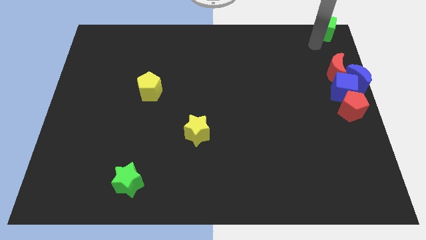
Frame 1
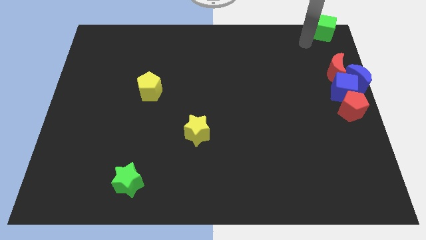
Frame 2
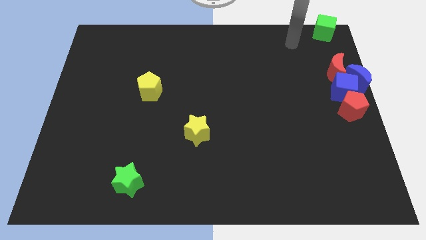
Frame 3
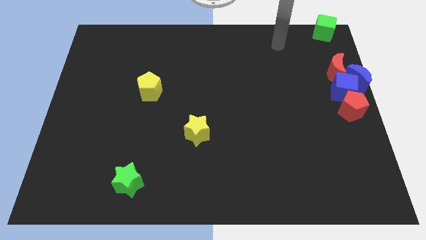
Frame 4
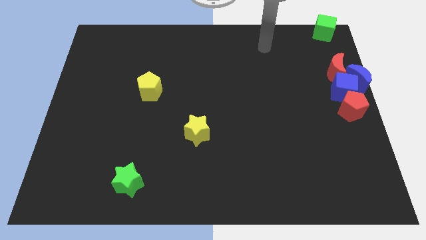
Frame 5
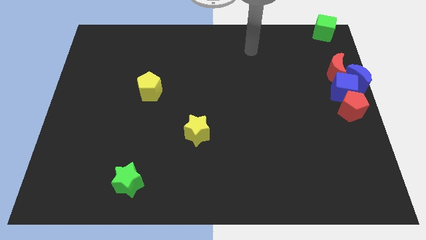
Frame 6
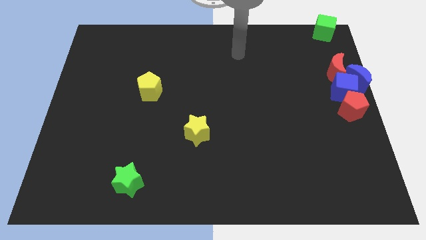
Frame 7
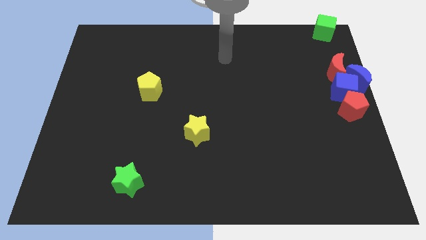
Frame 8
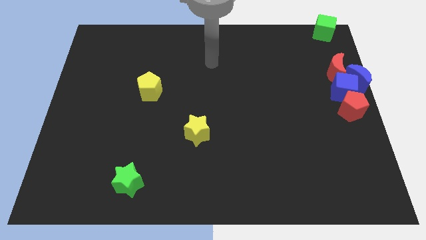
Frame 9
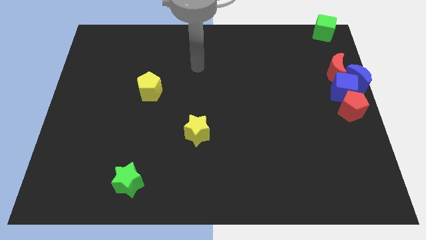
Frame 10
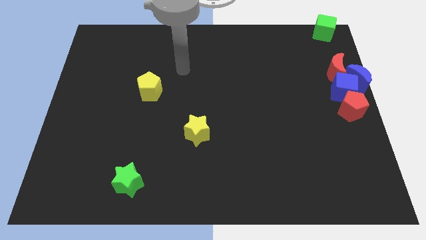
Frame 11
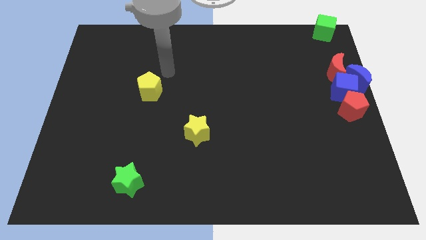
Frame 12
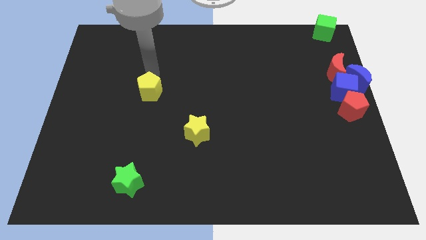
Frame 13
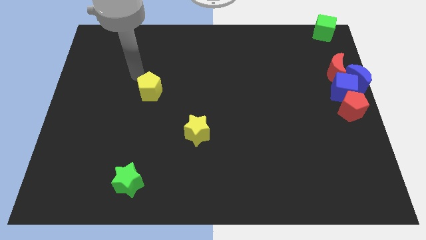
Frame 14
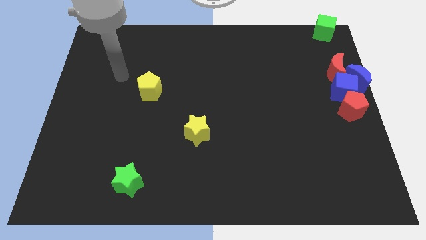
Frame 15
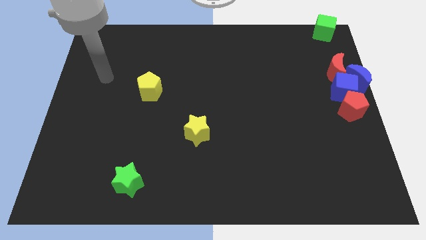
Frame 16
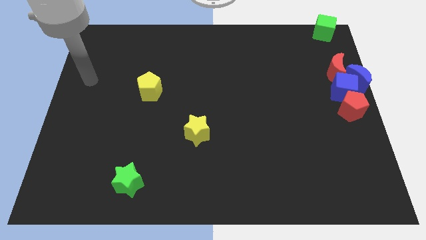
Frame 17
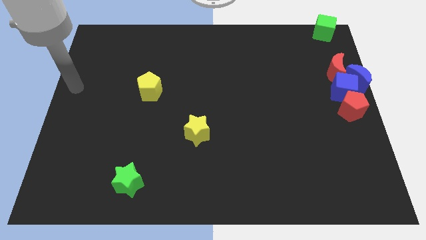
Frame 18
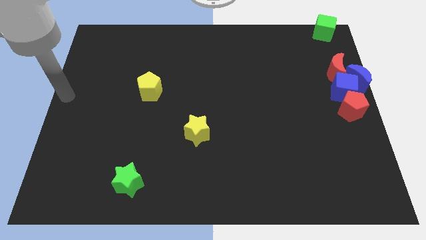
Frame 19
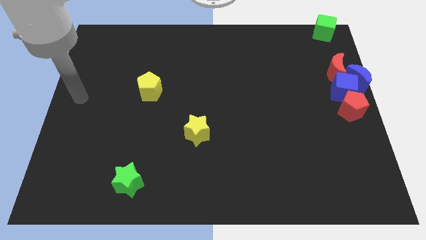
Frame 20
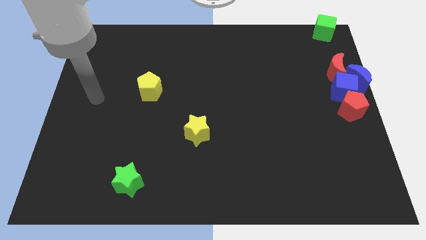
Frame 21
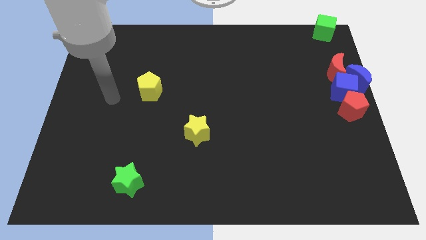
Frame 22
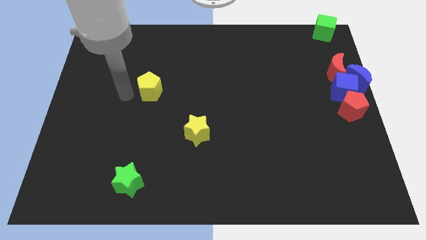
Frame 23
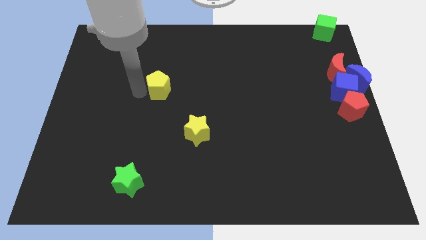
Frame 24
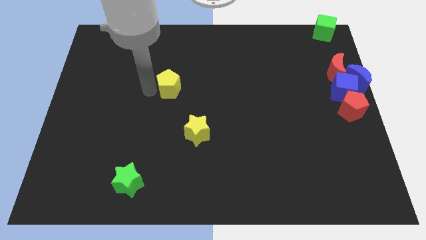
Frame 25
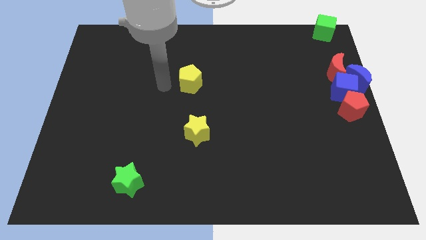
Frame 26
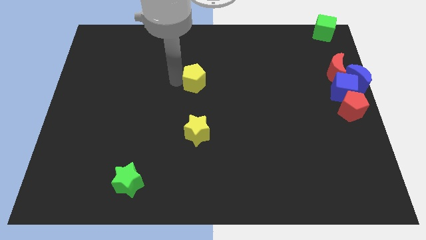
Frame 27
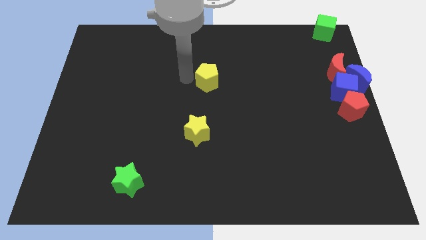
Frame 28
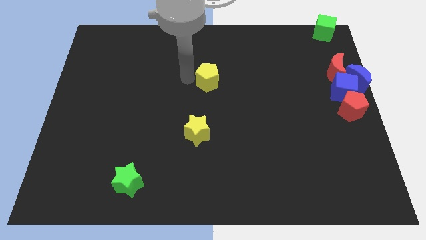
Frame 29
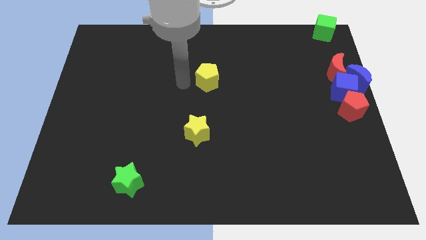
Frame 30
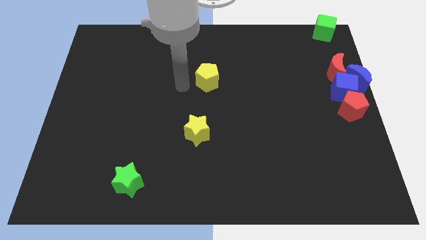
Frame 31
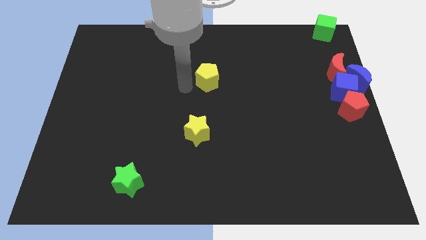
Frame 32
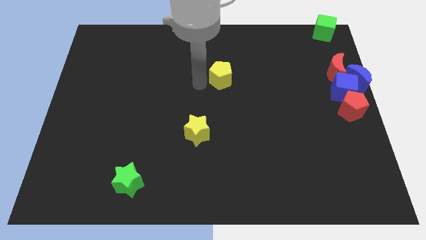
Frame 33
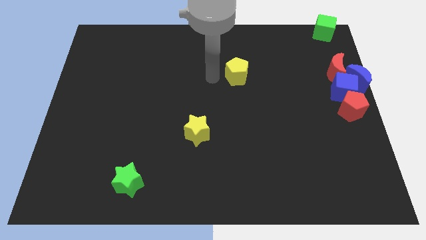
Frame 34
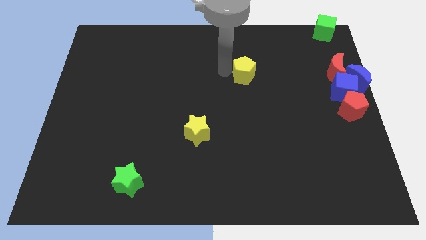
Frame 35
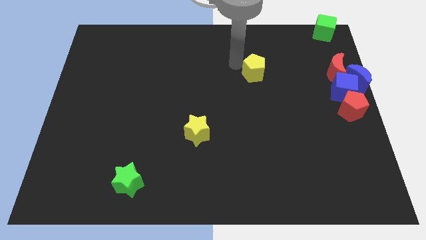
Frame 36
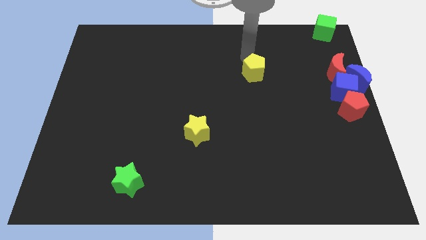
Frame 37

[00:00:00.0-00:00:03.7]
move the yellow pentagon to the top right of the yellow star

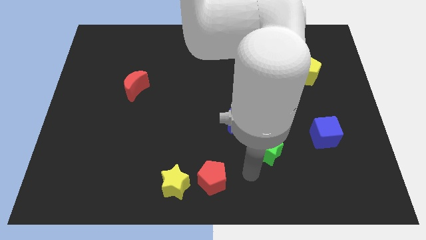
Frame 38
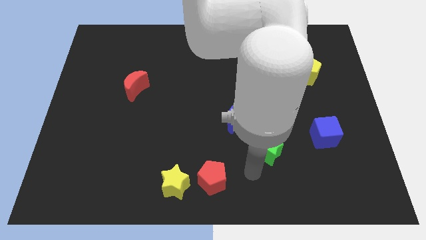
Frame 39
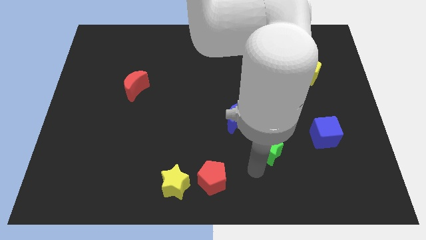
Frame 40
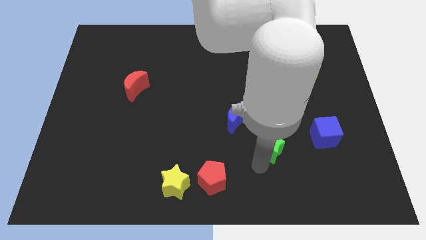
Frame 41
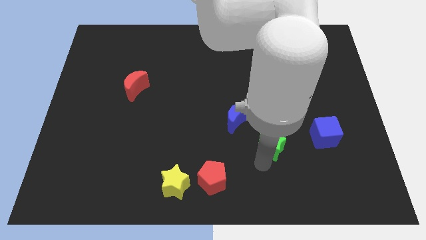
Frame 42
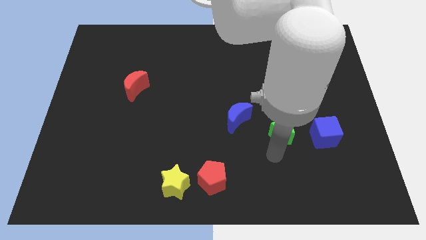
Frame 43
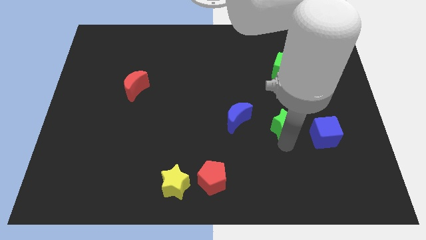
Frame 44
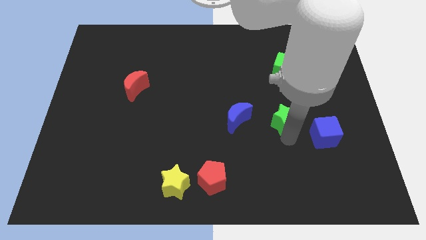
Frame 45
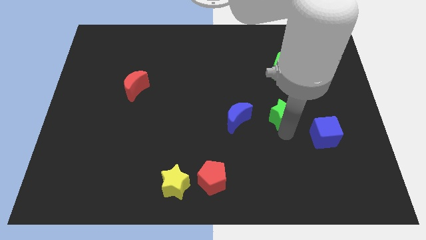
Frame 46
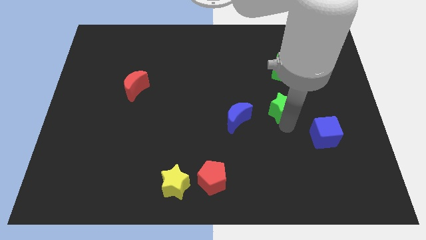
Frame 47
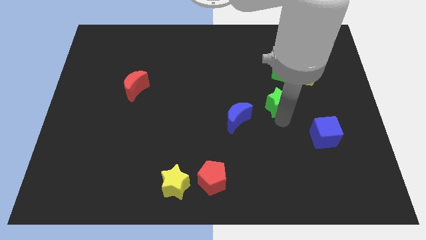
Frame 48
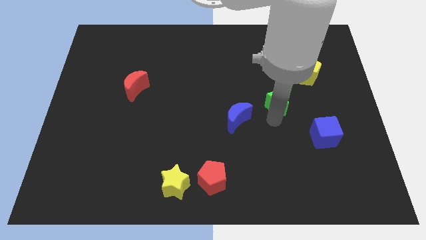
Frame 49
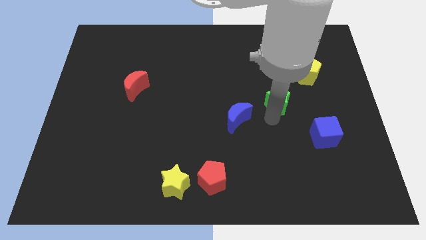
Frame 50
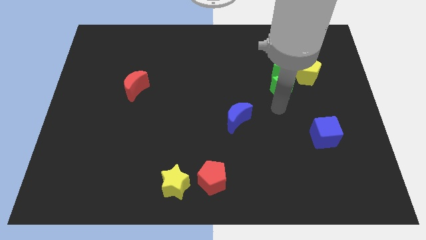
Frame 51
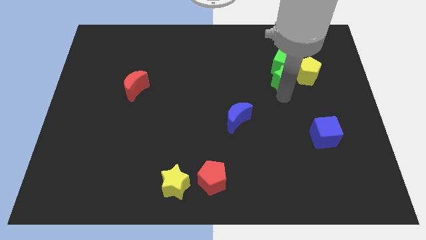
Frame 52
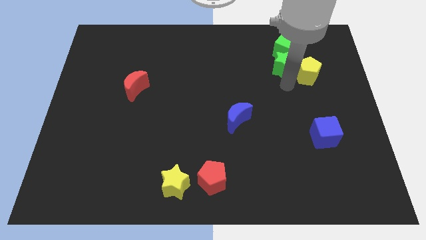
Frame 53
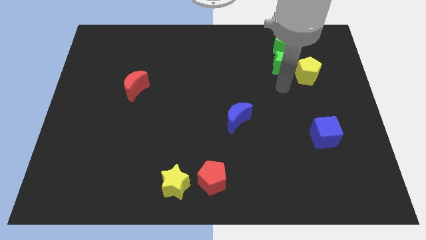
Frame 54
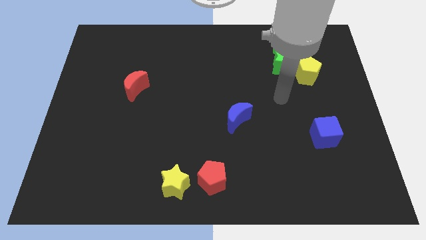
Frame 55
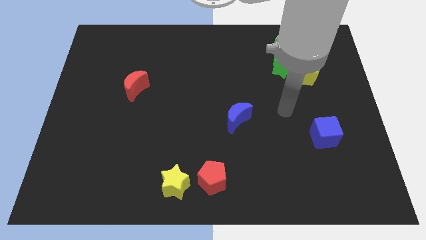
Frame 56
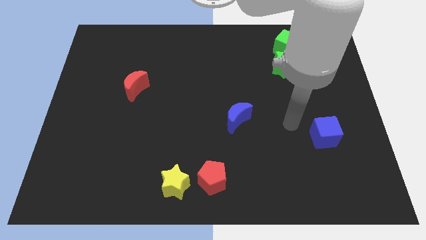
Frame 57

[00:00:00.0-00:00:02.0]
push the green star into the green cube

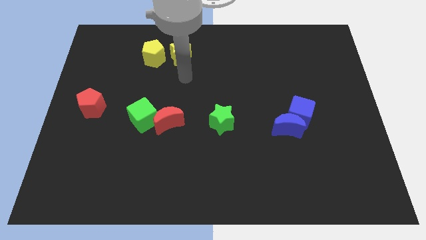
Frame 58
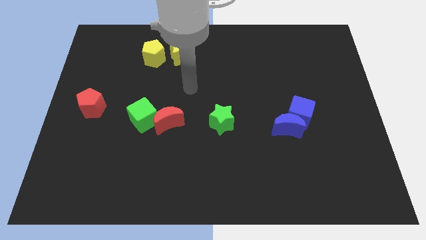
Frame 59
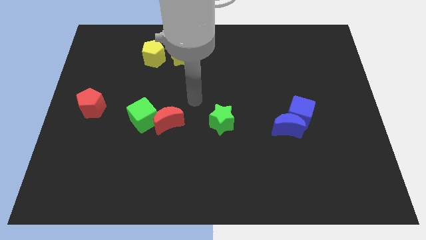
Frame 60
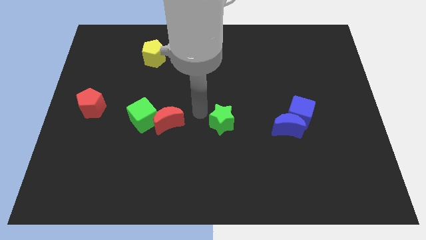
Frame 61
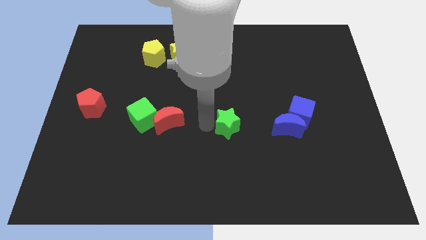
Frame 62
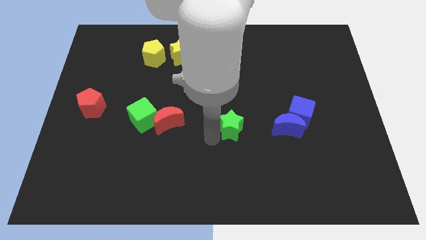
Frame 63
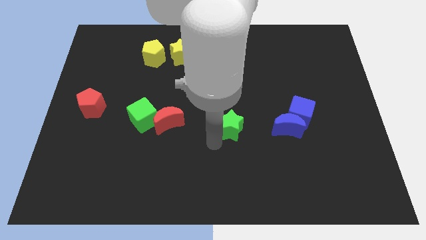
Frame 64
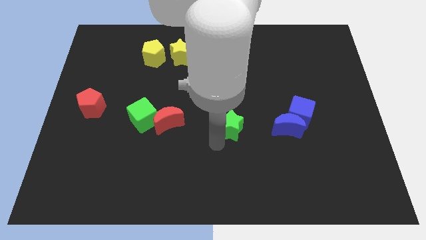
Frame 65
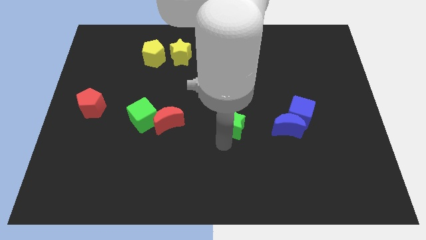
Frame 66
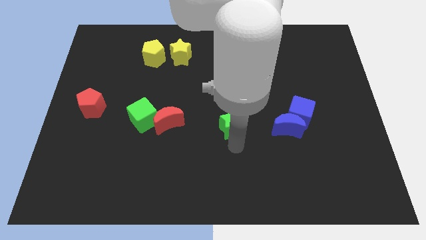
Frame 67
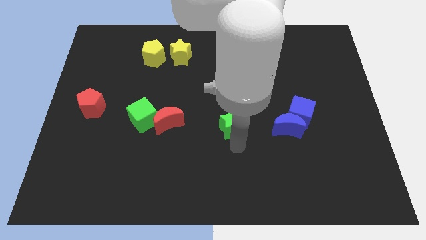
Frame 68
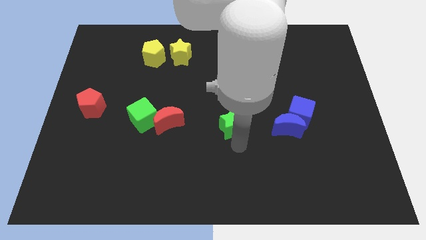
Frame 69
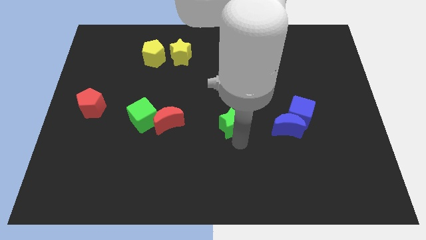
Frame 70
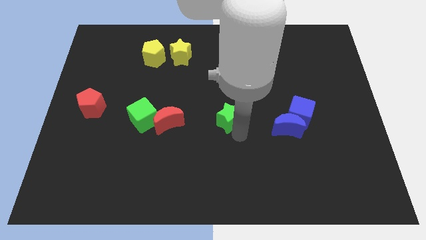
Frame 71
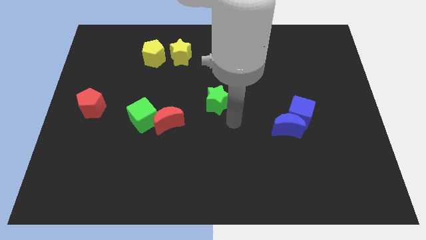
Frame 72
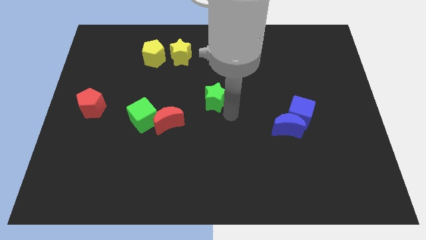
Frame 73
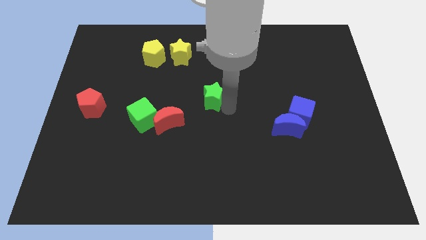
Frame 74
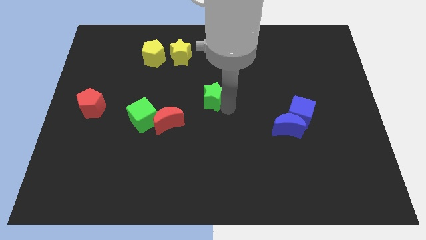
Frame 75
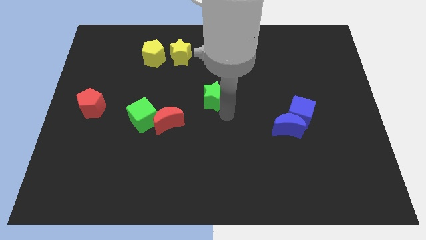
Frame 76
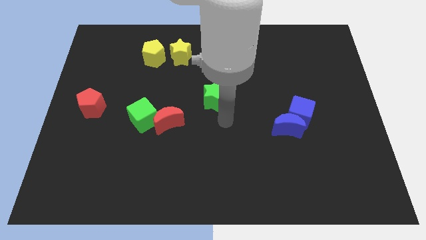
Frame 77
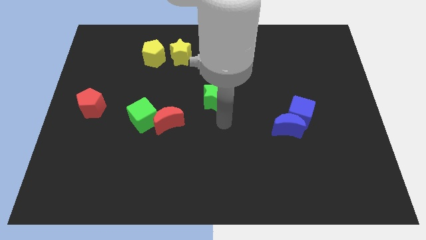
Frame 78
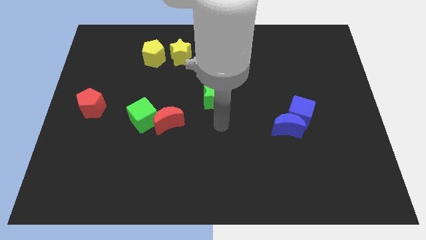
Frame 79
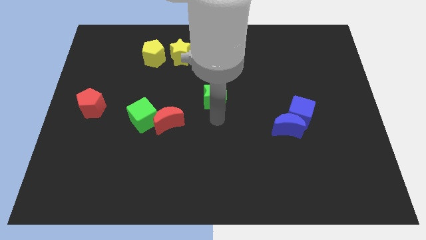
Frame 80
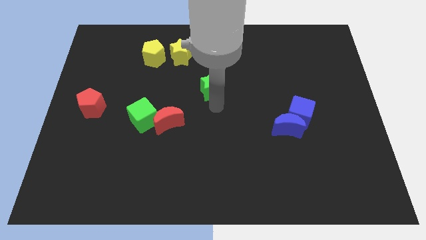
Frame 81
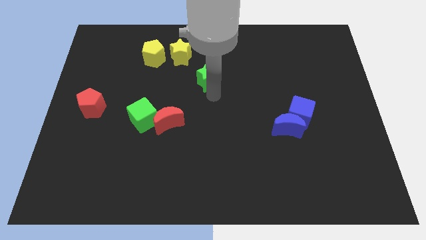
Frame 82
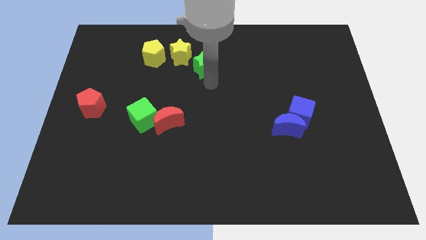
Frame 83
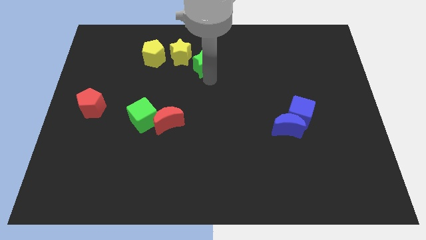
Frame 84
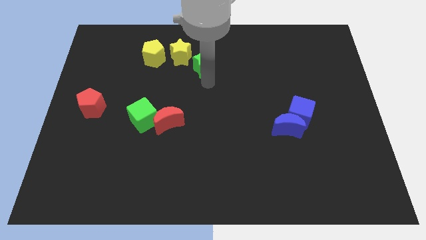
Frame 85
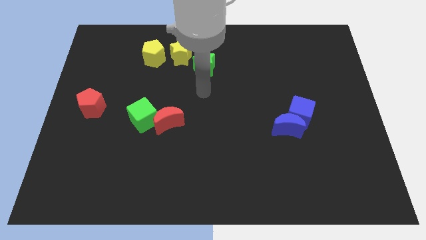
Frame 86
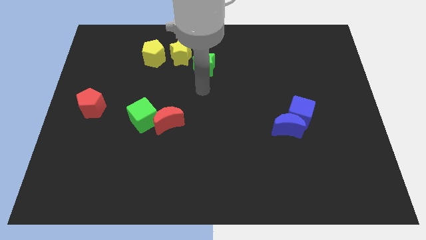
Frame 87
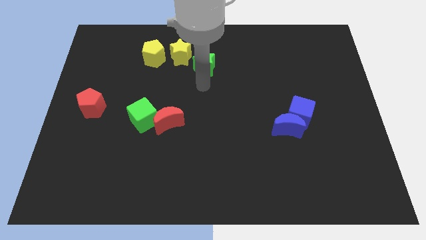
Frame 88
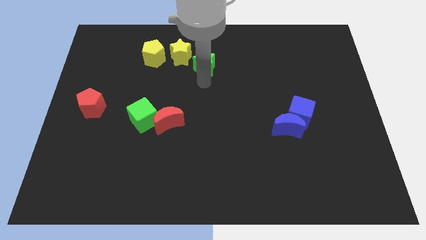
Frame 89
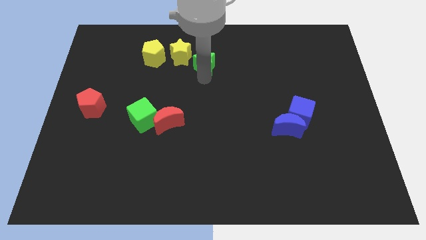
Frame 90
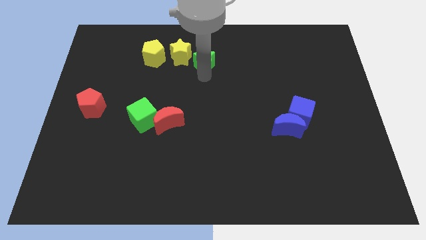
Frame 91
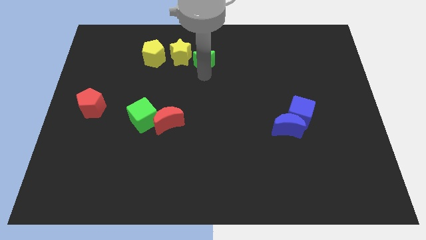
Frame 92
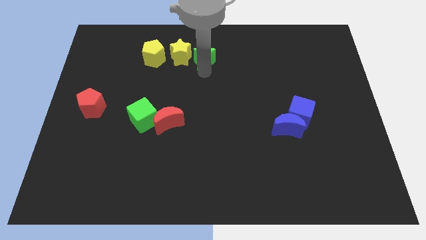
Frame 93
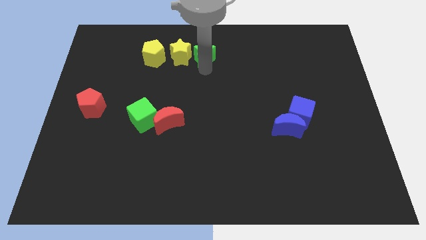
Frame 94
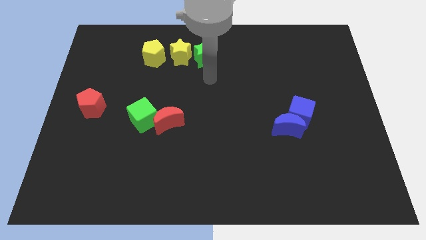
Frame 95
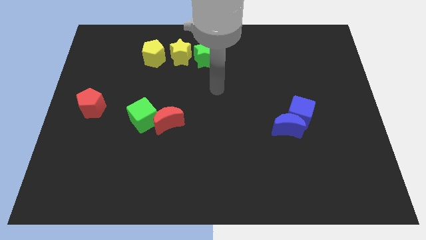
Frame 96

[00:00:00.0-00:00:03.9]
push the green star to the right side of the yellow star
